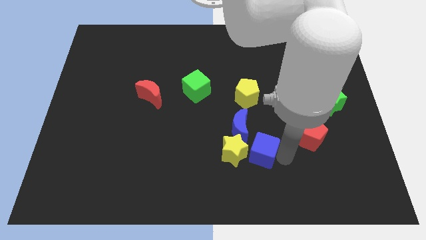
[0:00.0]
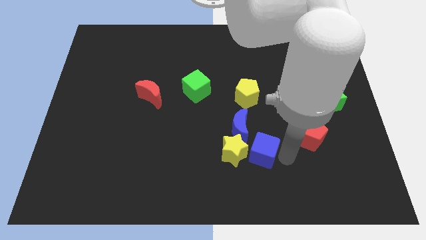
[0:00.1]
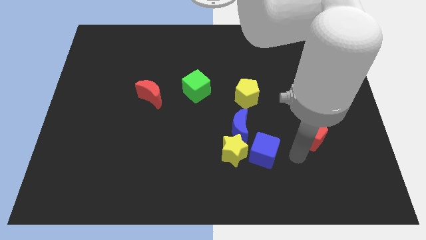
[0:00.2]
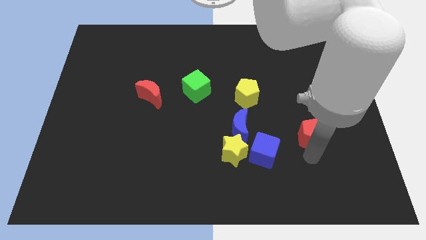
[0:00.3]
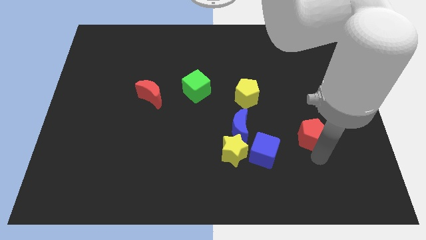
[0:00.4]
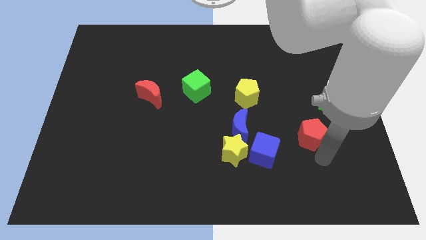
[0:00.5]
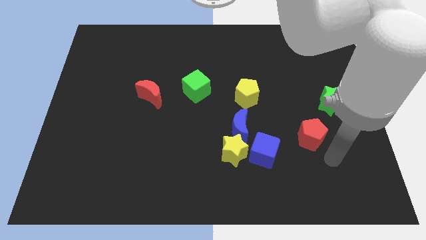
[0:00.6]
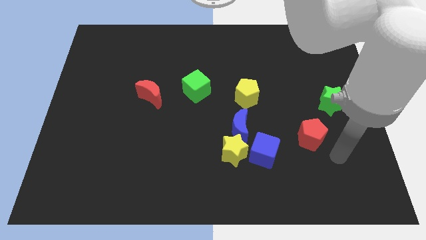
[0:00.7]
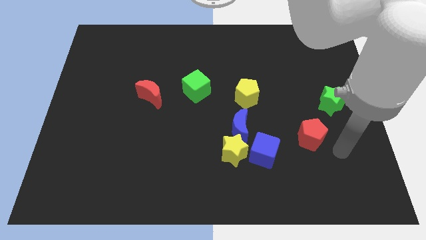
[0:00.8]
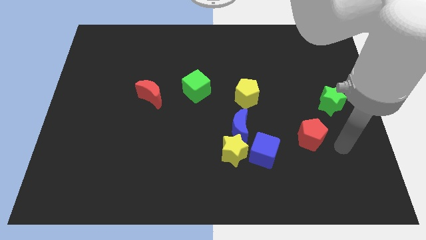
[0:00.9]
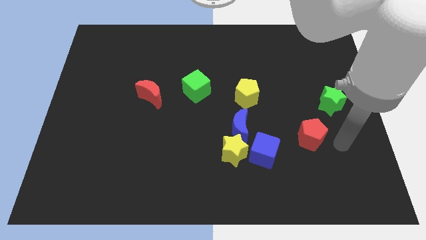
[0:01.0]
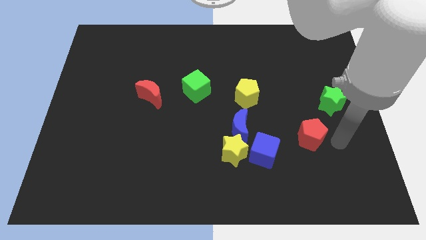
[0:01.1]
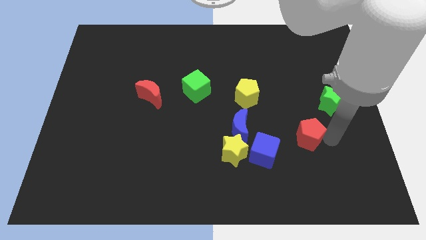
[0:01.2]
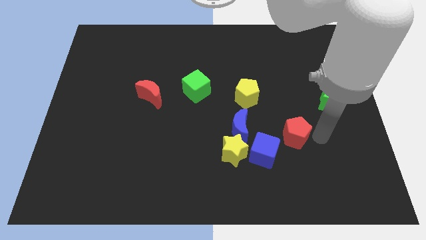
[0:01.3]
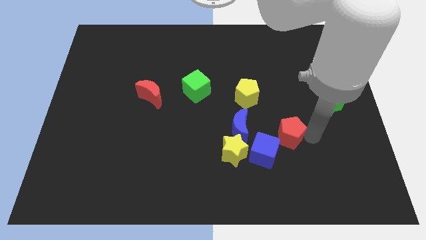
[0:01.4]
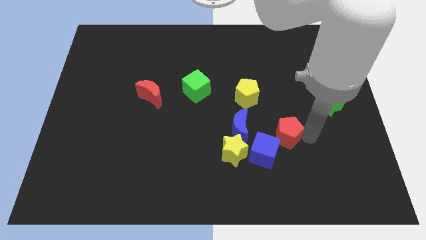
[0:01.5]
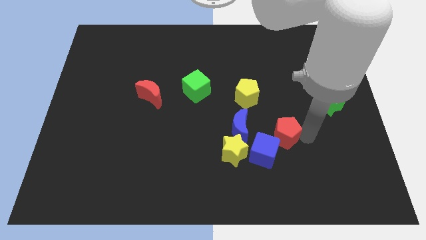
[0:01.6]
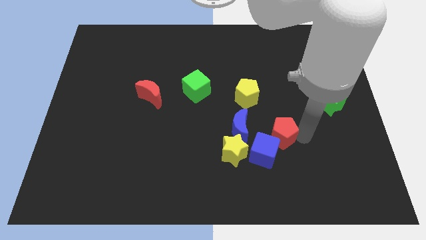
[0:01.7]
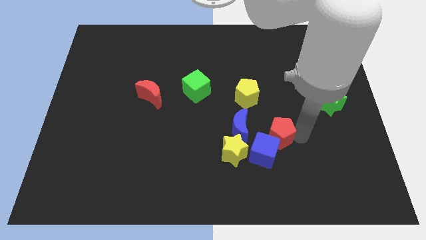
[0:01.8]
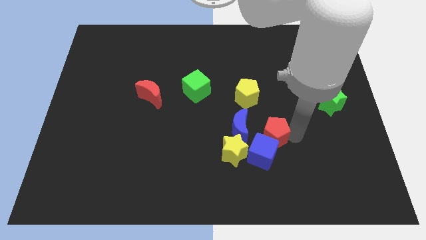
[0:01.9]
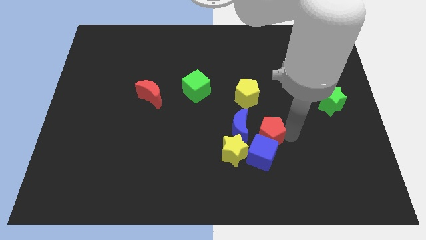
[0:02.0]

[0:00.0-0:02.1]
push the red pentagon to the top of the blue cube

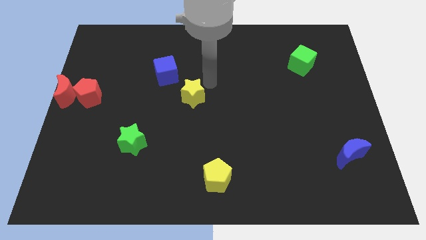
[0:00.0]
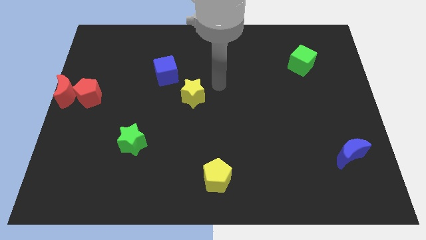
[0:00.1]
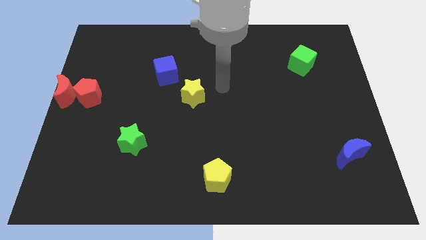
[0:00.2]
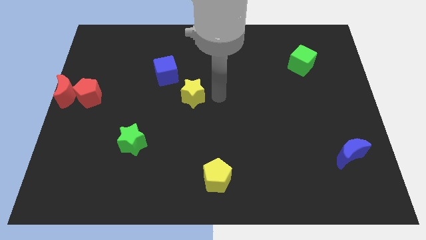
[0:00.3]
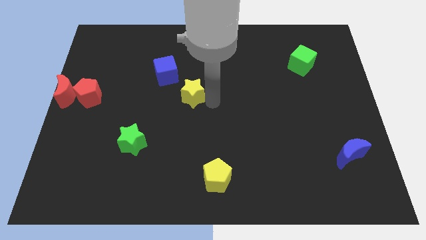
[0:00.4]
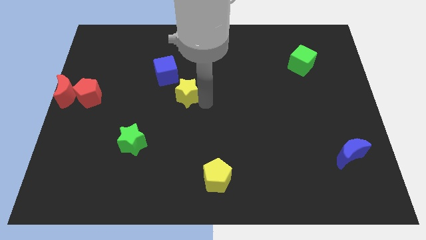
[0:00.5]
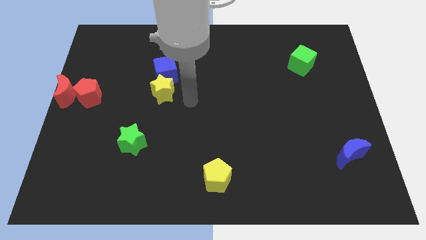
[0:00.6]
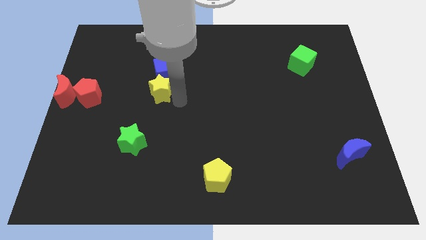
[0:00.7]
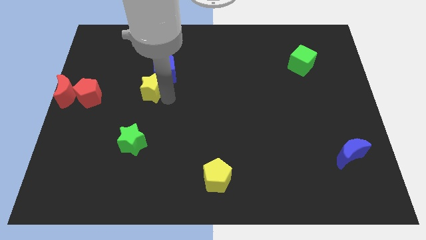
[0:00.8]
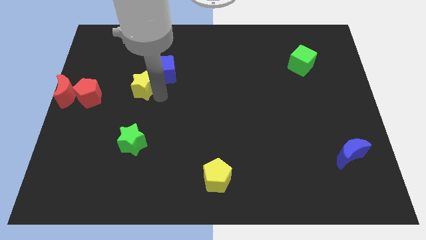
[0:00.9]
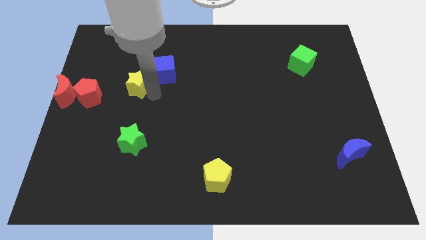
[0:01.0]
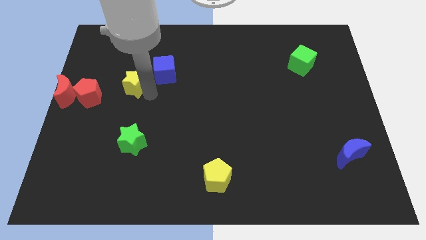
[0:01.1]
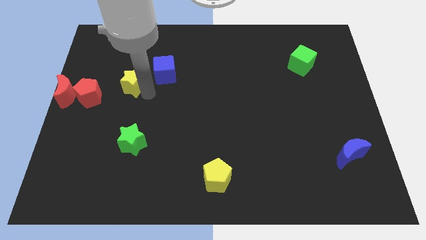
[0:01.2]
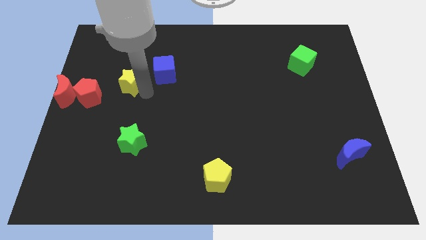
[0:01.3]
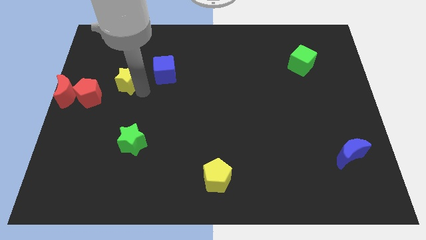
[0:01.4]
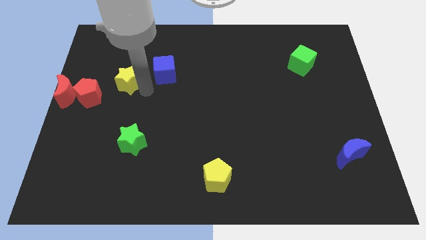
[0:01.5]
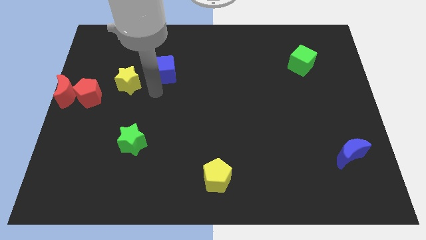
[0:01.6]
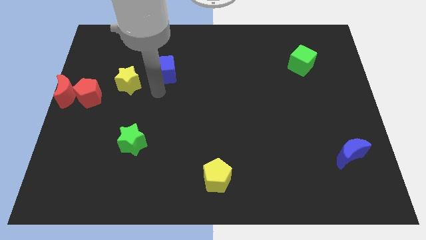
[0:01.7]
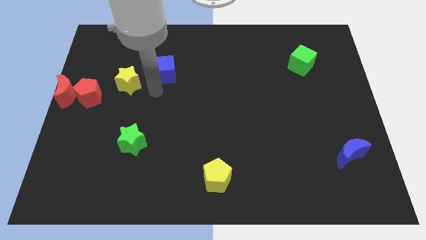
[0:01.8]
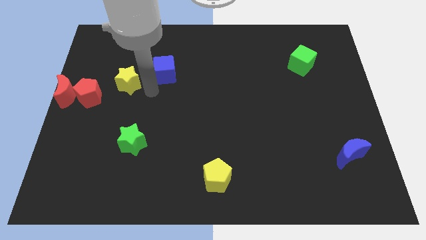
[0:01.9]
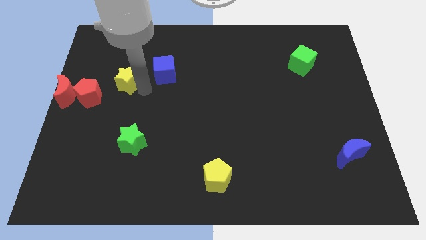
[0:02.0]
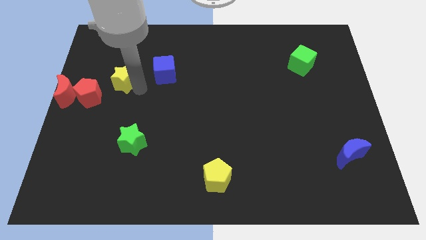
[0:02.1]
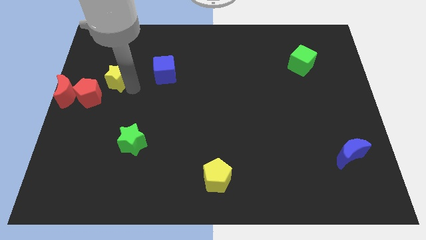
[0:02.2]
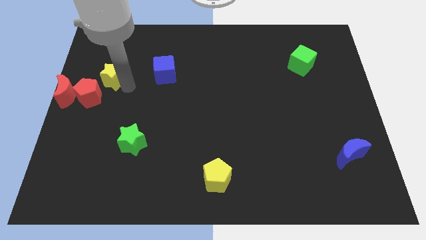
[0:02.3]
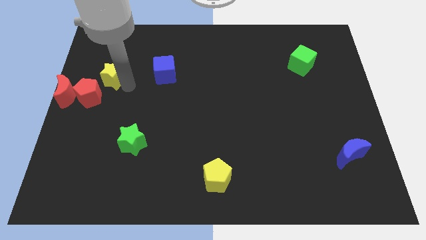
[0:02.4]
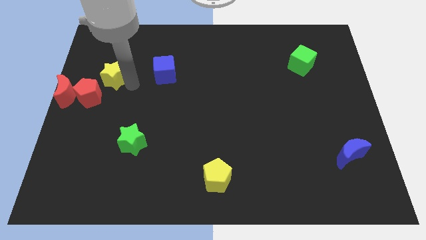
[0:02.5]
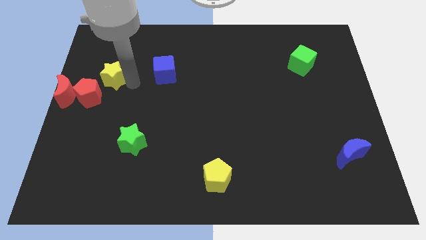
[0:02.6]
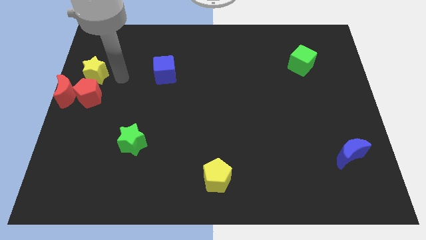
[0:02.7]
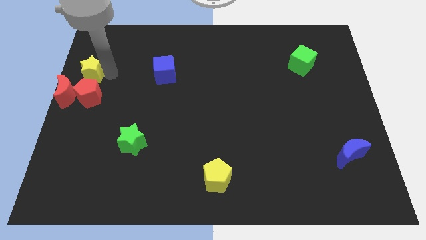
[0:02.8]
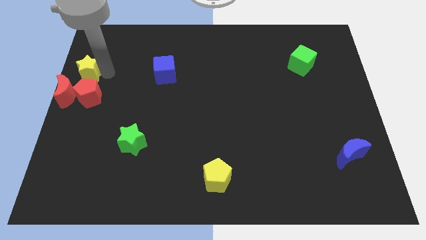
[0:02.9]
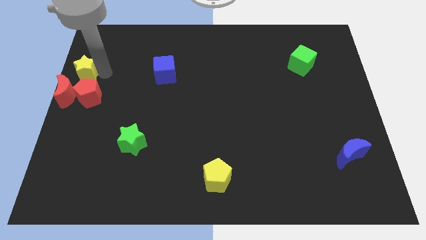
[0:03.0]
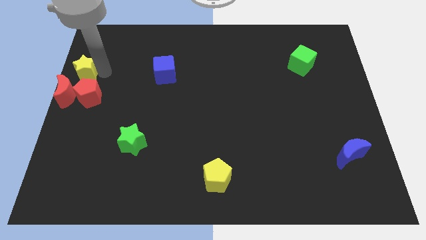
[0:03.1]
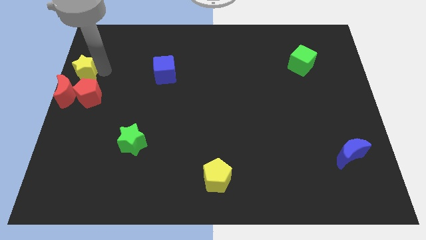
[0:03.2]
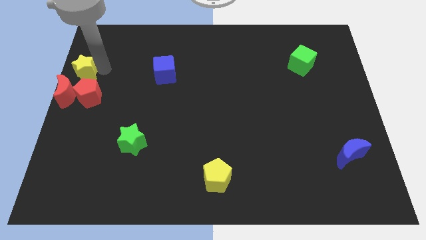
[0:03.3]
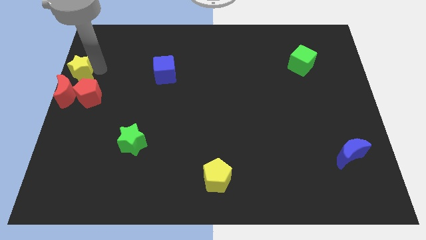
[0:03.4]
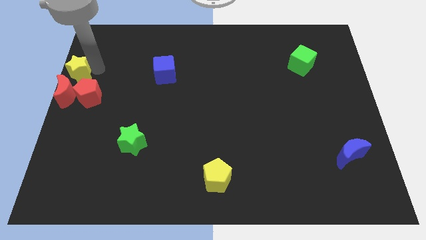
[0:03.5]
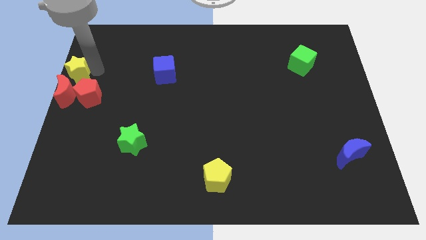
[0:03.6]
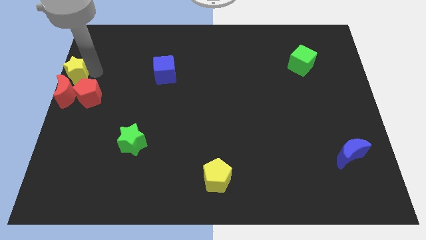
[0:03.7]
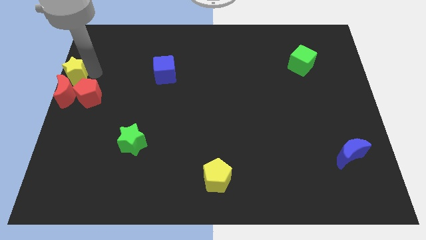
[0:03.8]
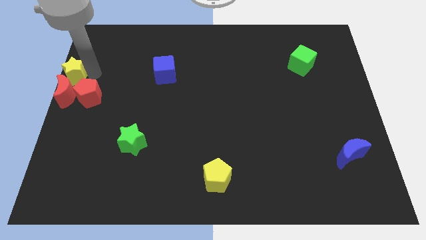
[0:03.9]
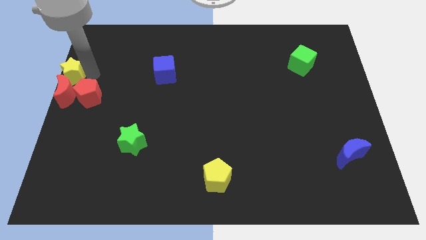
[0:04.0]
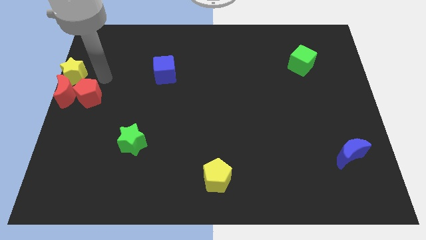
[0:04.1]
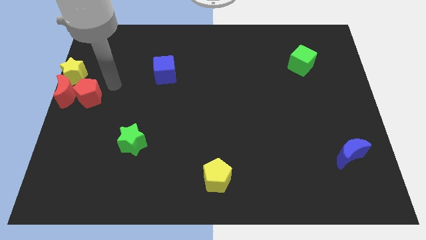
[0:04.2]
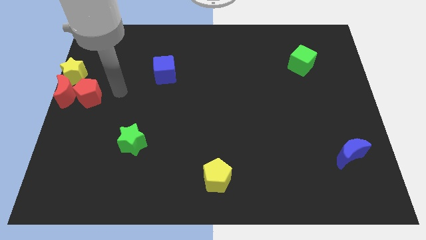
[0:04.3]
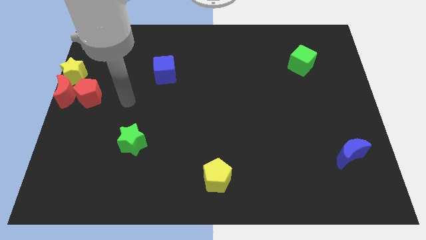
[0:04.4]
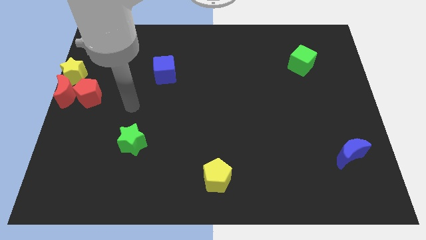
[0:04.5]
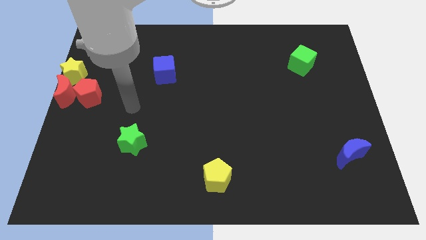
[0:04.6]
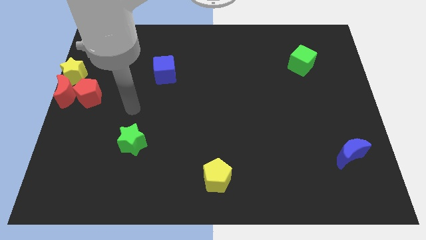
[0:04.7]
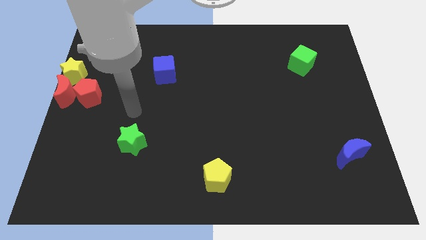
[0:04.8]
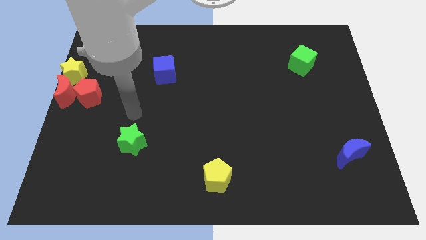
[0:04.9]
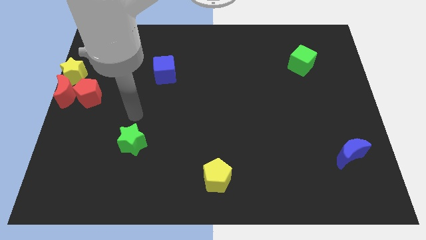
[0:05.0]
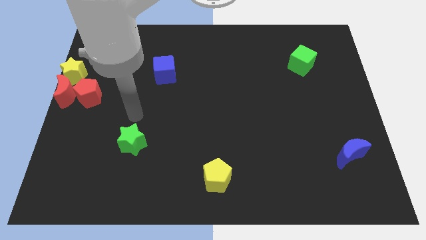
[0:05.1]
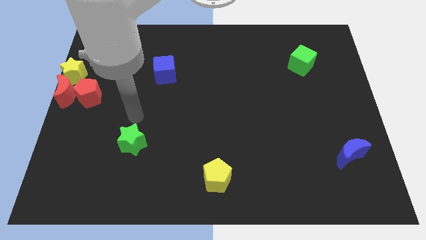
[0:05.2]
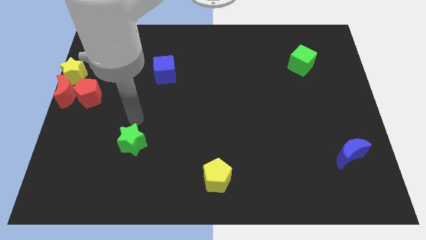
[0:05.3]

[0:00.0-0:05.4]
move yellow star to the top of red crescent

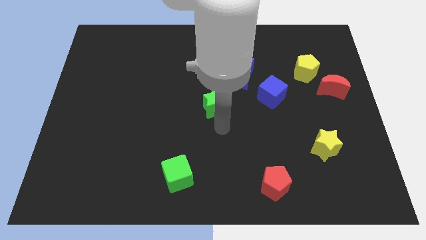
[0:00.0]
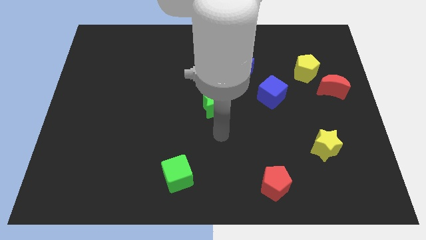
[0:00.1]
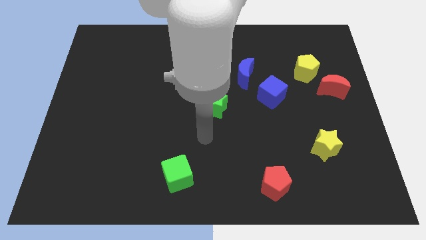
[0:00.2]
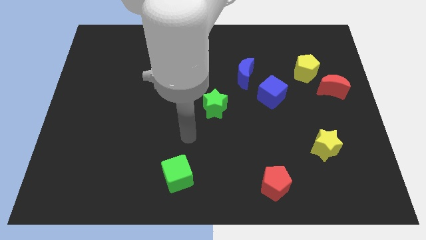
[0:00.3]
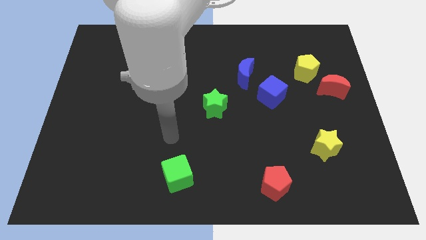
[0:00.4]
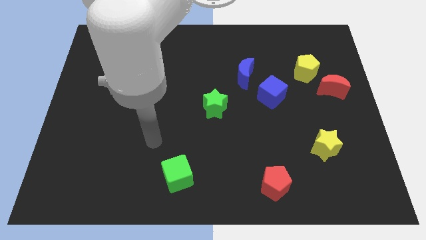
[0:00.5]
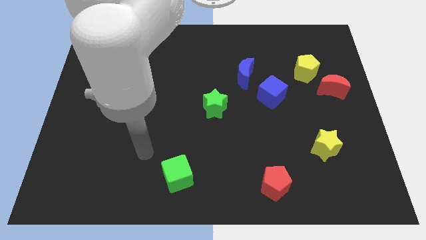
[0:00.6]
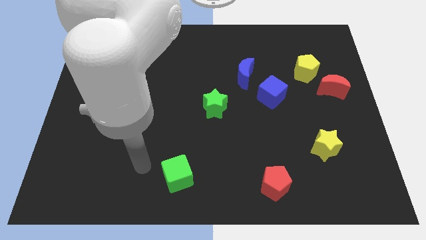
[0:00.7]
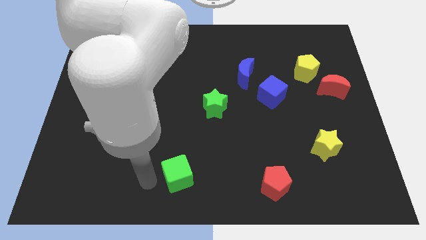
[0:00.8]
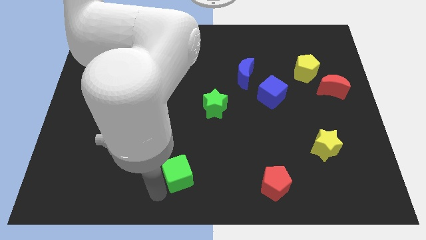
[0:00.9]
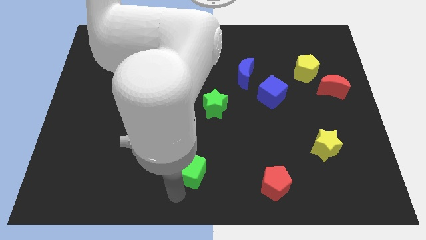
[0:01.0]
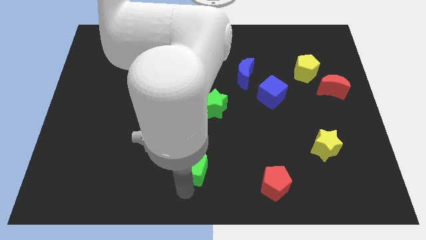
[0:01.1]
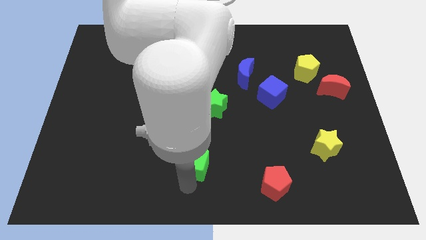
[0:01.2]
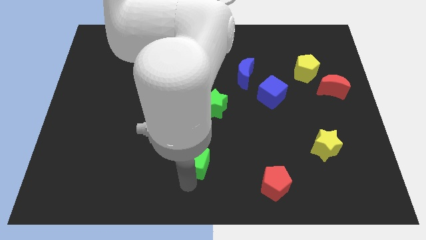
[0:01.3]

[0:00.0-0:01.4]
slightly move the green cube to the top of the board
